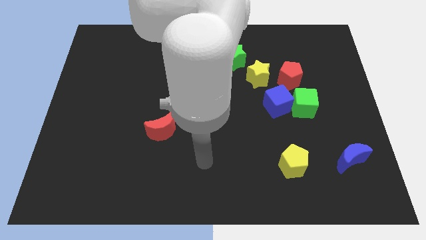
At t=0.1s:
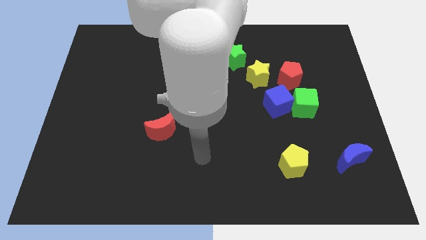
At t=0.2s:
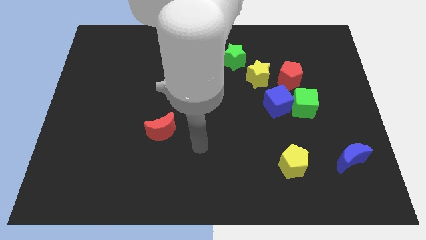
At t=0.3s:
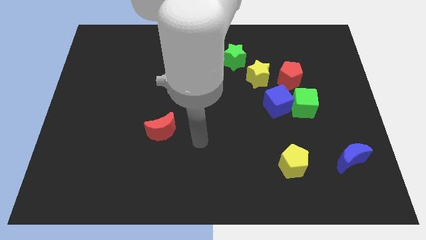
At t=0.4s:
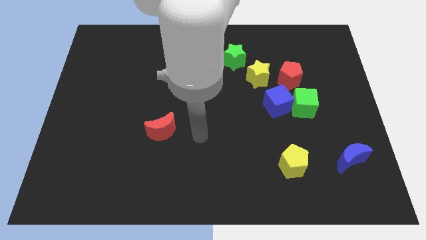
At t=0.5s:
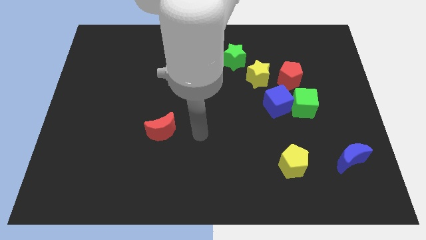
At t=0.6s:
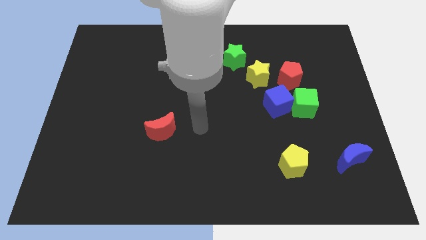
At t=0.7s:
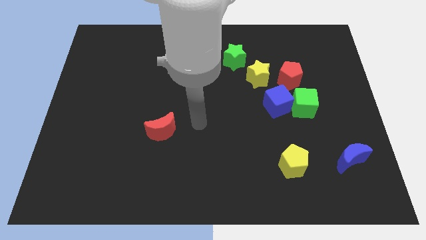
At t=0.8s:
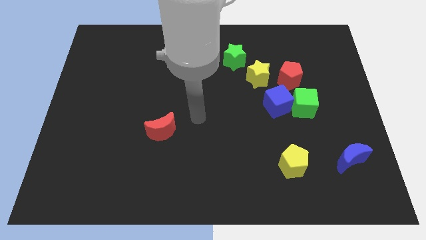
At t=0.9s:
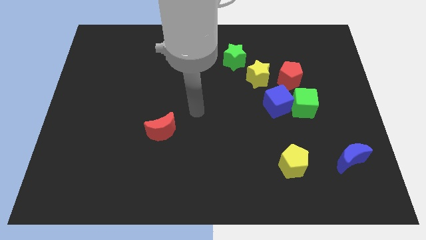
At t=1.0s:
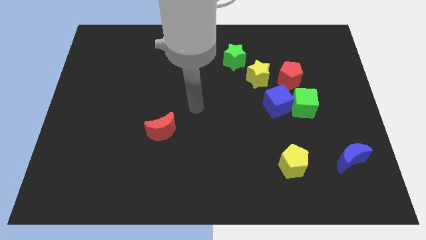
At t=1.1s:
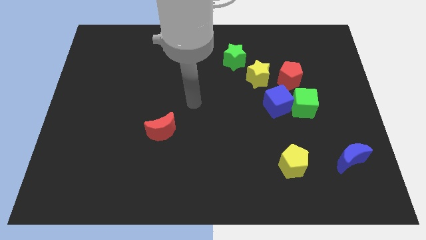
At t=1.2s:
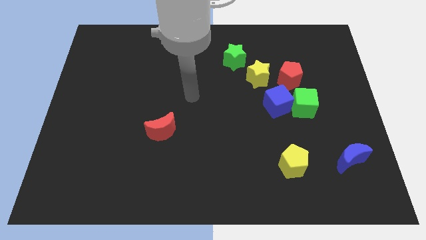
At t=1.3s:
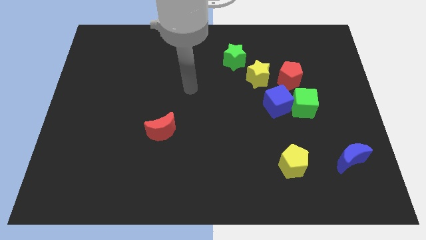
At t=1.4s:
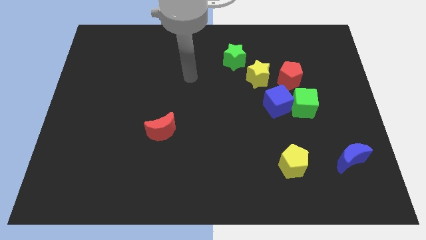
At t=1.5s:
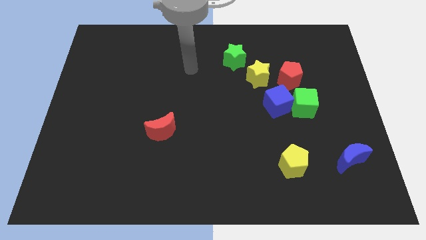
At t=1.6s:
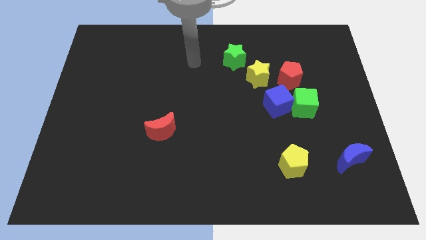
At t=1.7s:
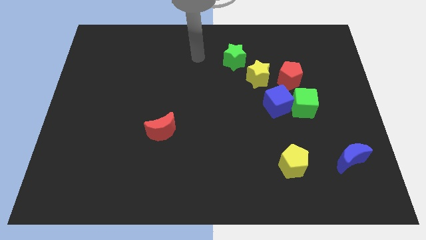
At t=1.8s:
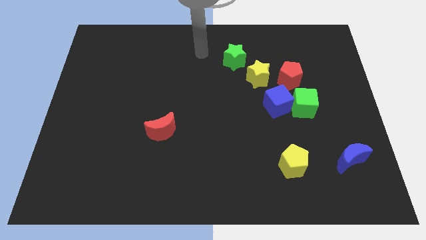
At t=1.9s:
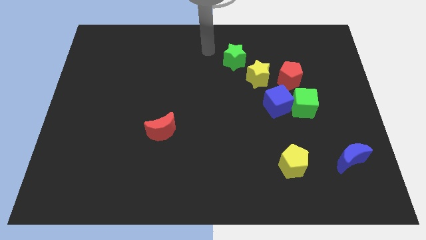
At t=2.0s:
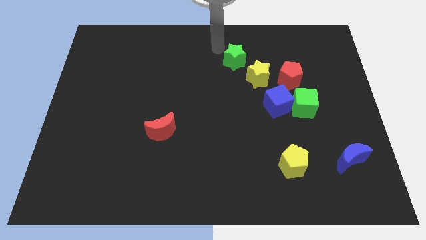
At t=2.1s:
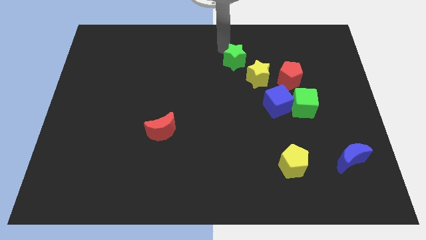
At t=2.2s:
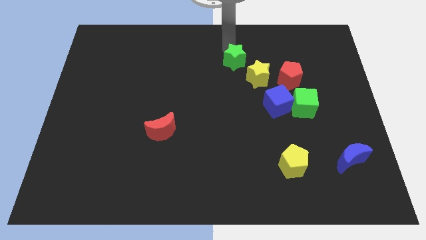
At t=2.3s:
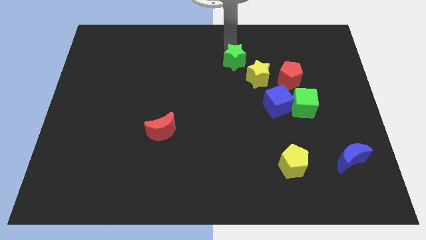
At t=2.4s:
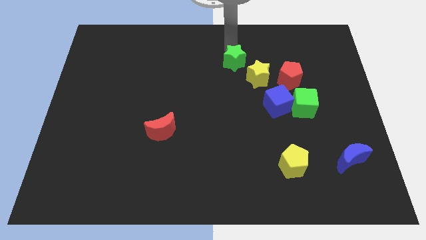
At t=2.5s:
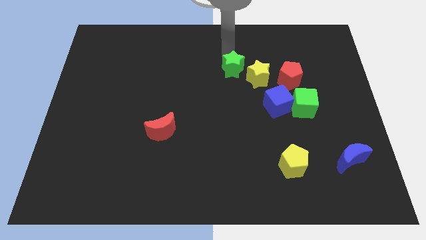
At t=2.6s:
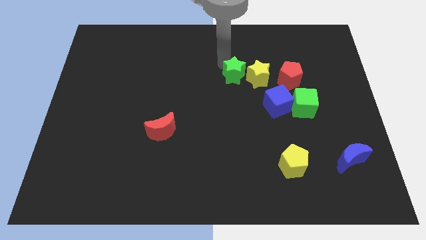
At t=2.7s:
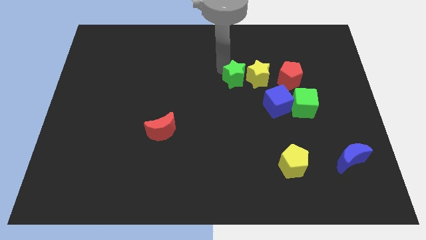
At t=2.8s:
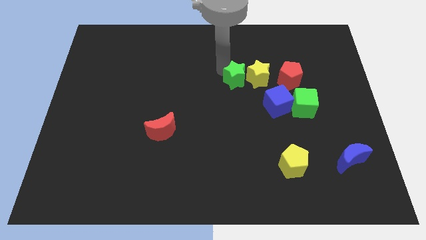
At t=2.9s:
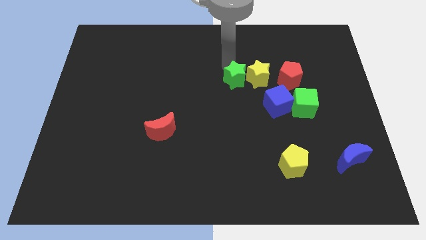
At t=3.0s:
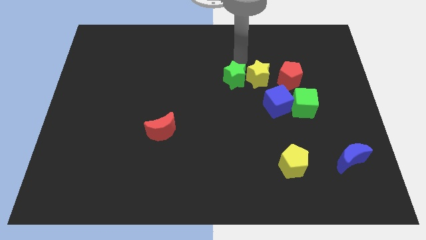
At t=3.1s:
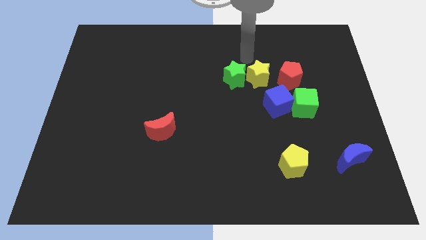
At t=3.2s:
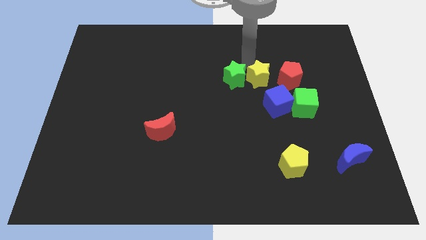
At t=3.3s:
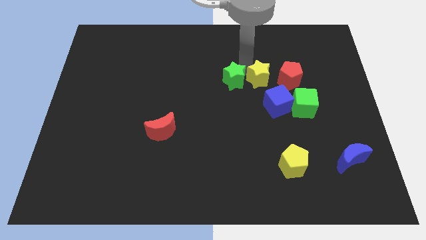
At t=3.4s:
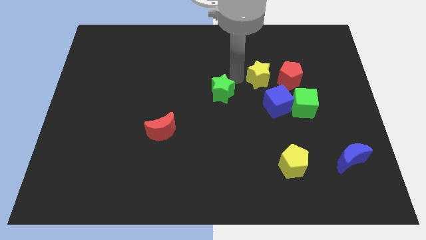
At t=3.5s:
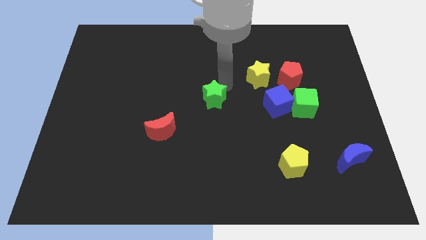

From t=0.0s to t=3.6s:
place the green star at the center of the board

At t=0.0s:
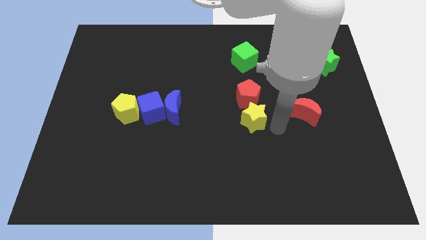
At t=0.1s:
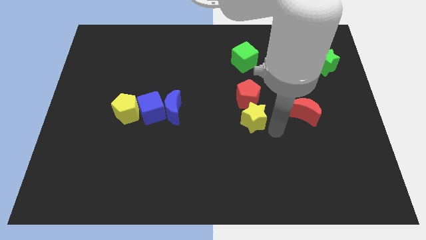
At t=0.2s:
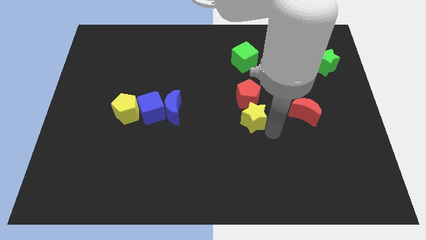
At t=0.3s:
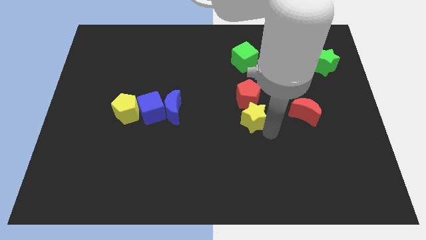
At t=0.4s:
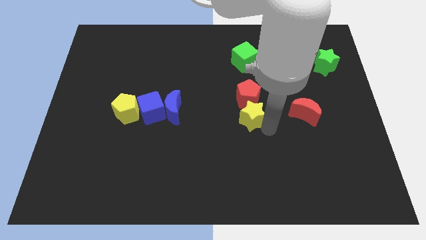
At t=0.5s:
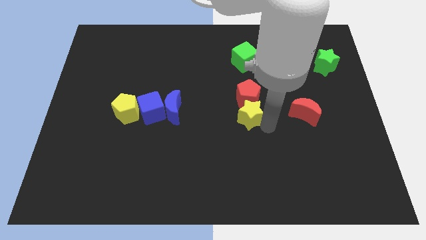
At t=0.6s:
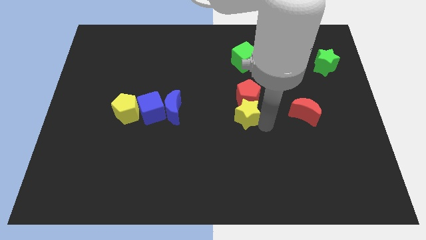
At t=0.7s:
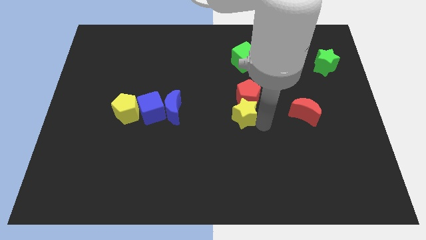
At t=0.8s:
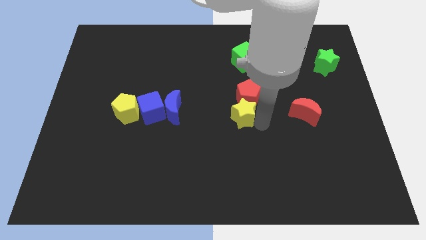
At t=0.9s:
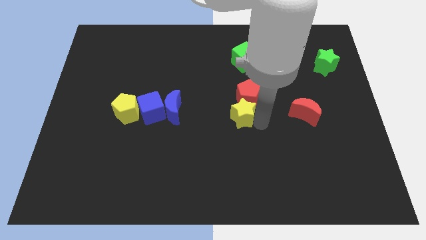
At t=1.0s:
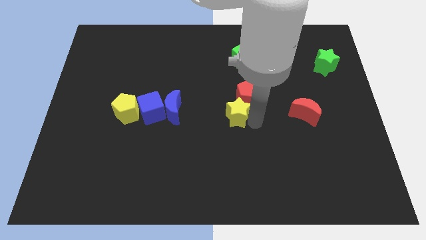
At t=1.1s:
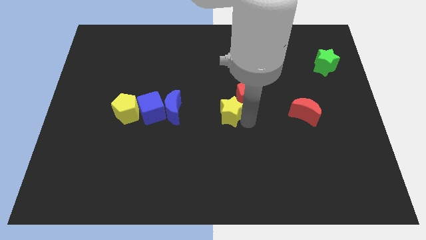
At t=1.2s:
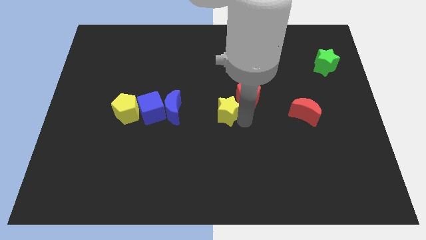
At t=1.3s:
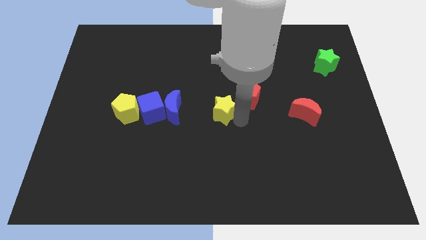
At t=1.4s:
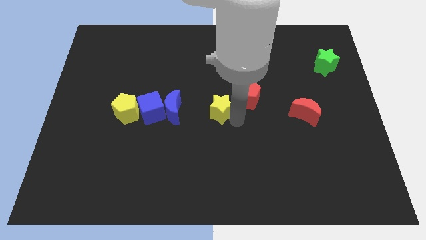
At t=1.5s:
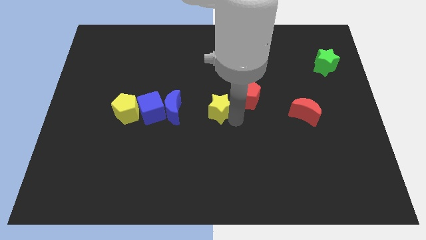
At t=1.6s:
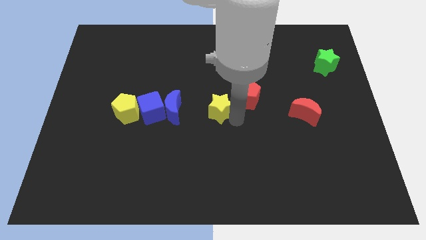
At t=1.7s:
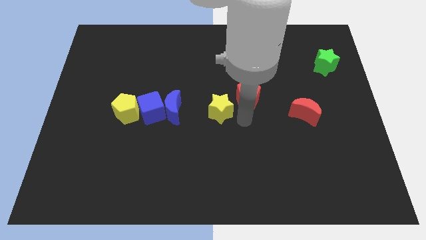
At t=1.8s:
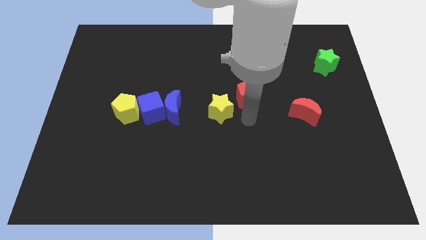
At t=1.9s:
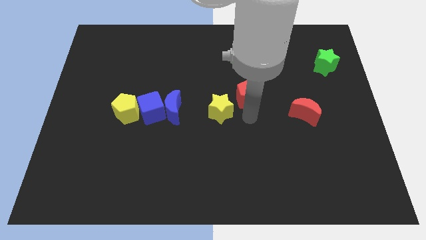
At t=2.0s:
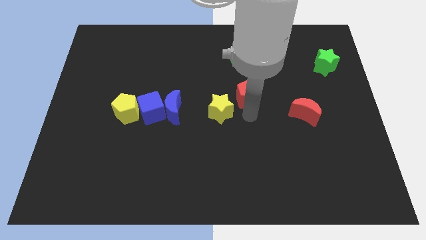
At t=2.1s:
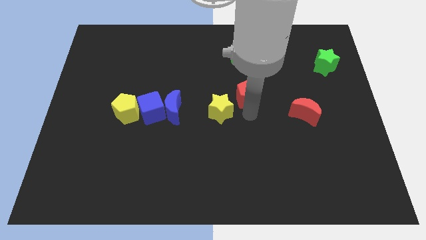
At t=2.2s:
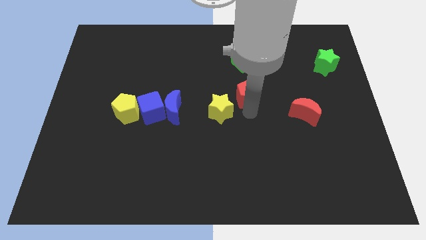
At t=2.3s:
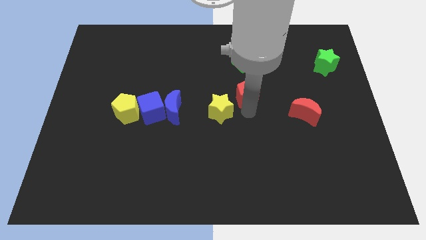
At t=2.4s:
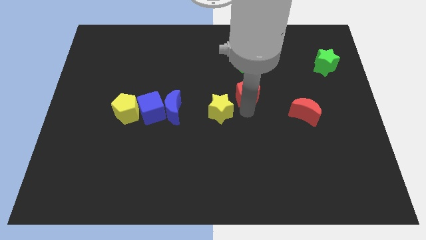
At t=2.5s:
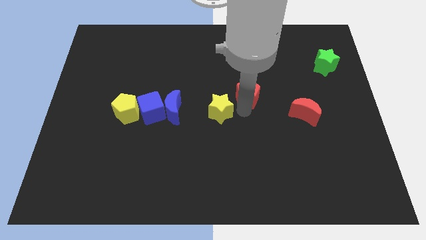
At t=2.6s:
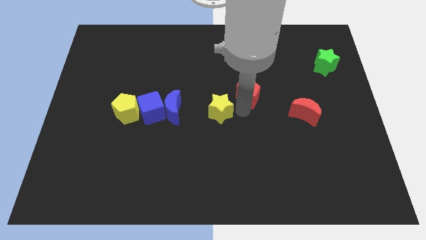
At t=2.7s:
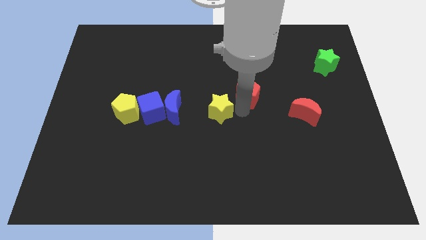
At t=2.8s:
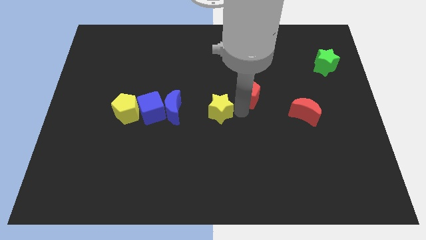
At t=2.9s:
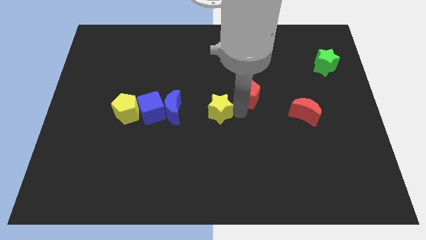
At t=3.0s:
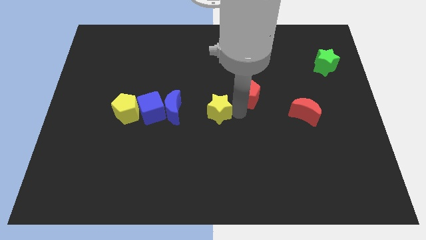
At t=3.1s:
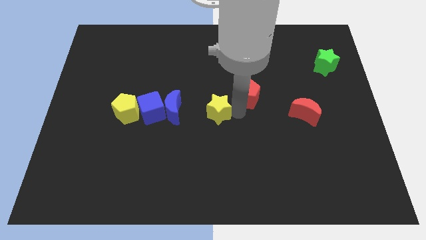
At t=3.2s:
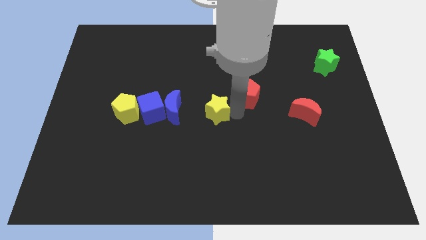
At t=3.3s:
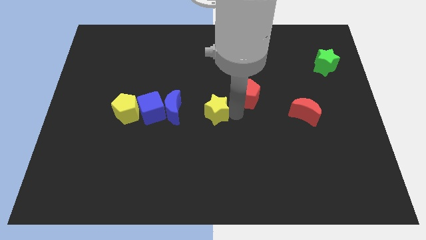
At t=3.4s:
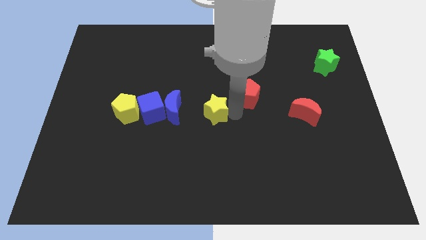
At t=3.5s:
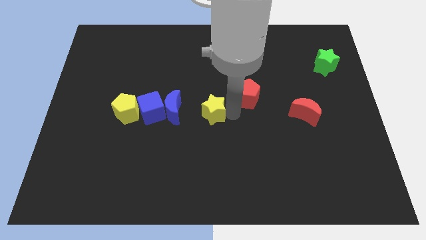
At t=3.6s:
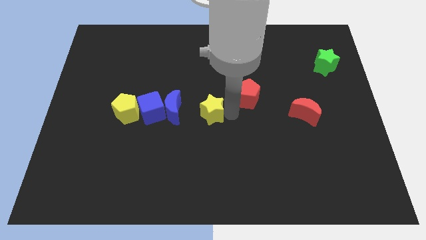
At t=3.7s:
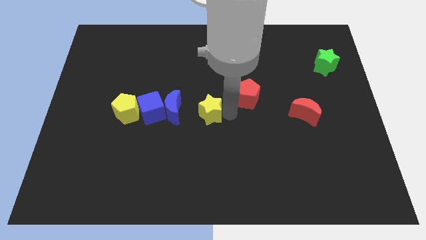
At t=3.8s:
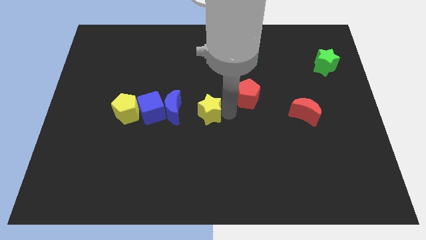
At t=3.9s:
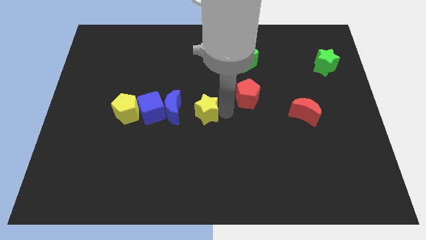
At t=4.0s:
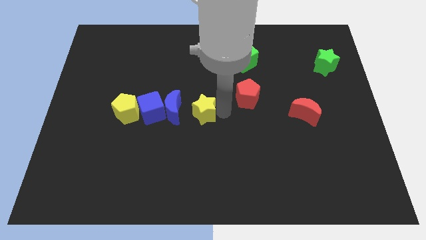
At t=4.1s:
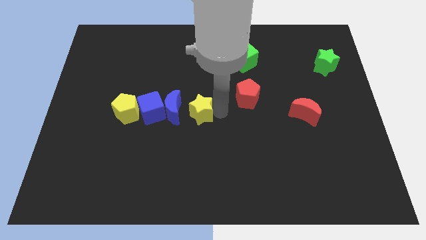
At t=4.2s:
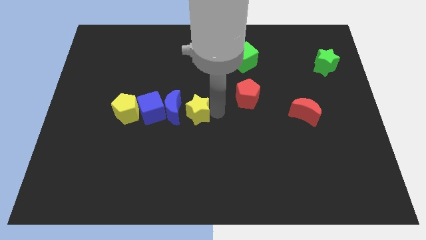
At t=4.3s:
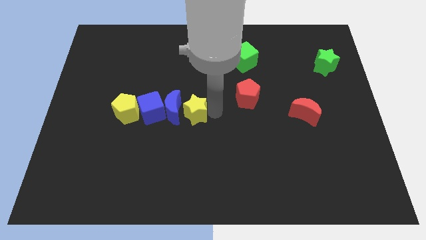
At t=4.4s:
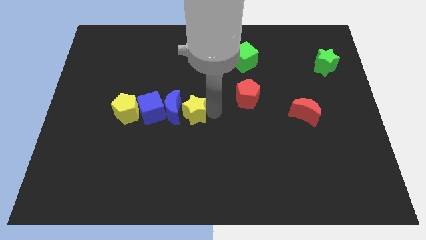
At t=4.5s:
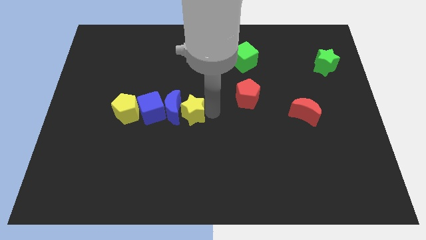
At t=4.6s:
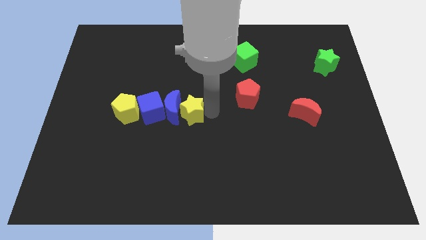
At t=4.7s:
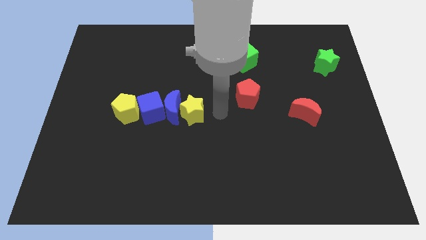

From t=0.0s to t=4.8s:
push the yellow star into the right side of the blue crescent

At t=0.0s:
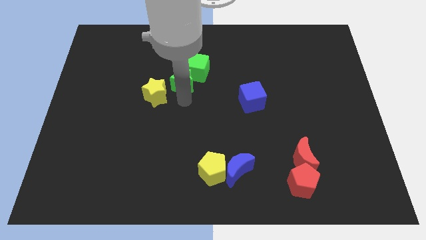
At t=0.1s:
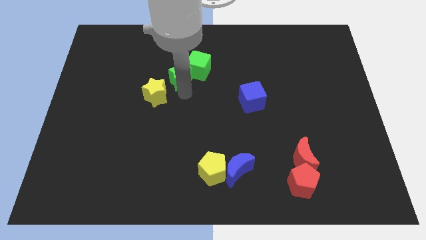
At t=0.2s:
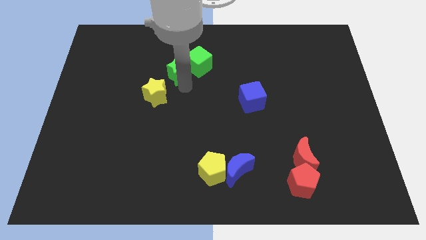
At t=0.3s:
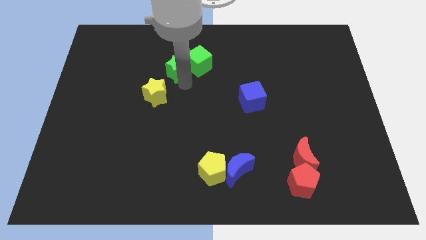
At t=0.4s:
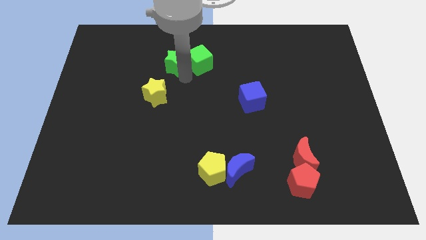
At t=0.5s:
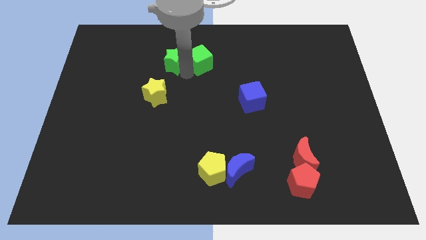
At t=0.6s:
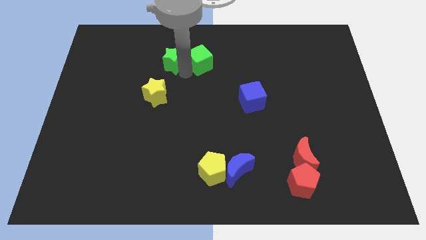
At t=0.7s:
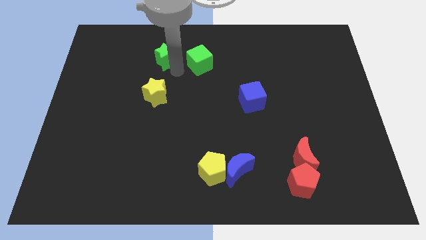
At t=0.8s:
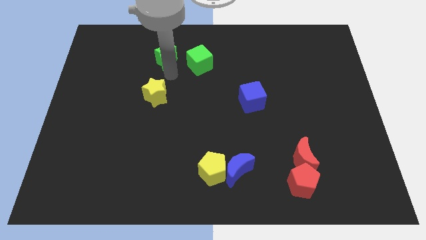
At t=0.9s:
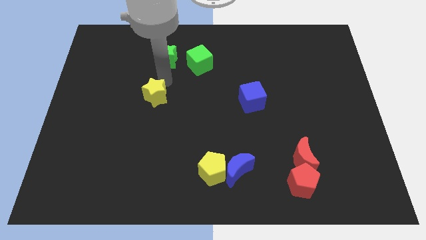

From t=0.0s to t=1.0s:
push the green star away from the green cube
